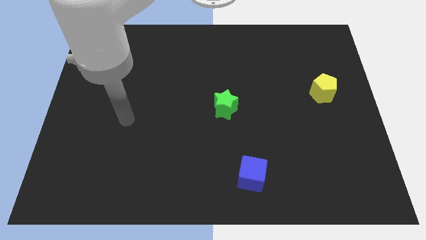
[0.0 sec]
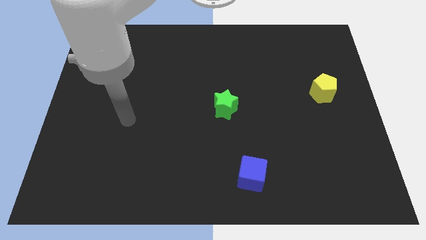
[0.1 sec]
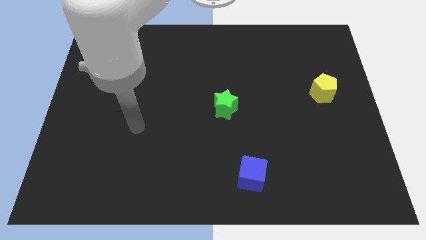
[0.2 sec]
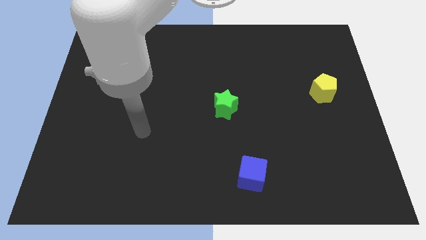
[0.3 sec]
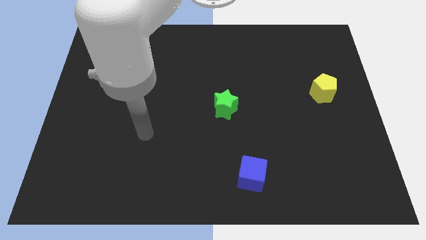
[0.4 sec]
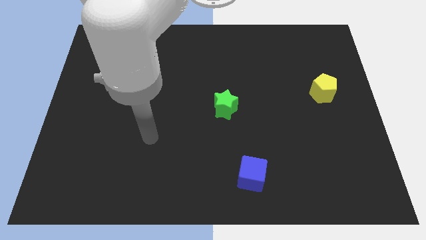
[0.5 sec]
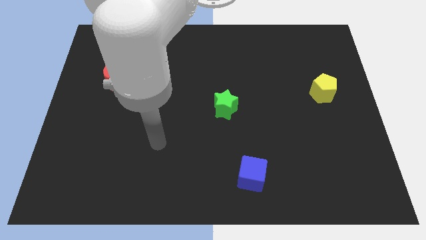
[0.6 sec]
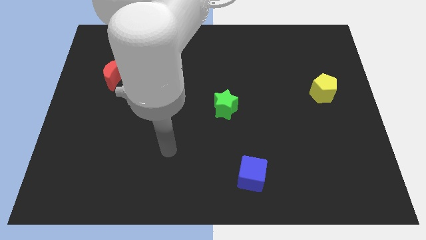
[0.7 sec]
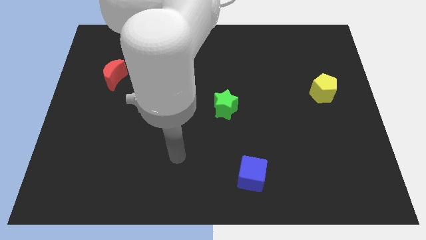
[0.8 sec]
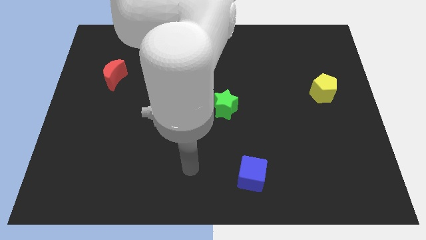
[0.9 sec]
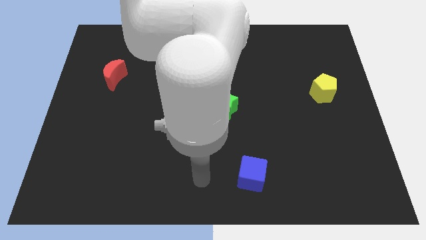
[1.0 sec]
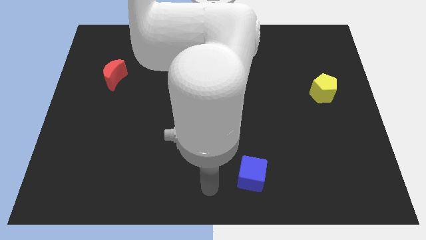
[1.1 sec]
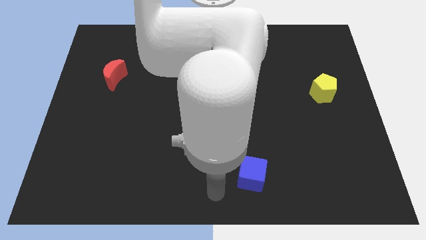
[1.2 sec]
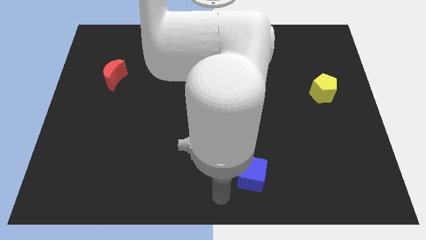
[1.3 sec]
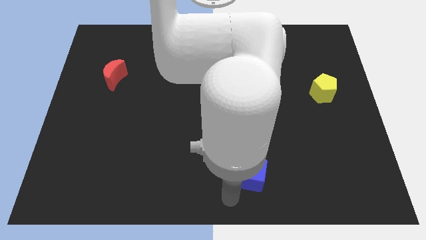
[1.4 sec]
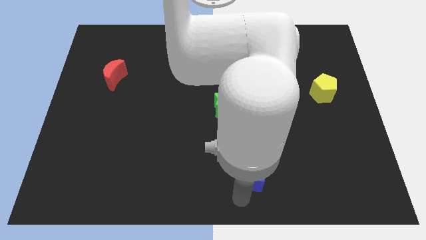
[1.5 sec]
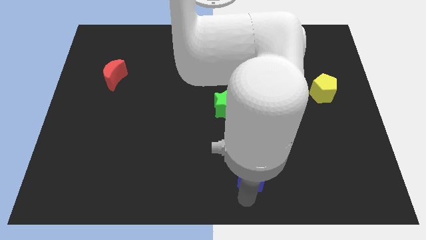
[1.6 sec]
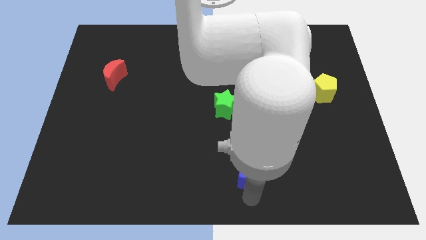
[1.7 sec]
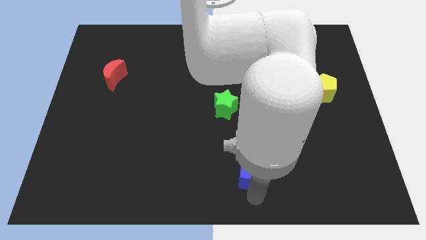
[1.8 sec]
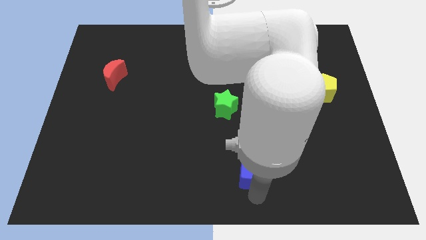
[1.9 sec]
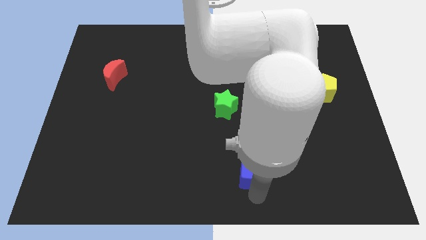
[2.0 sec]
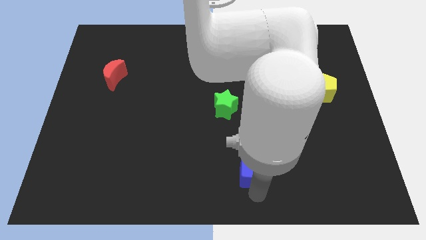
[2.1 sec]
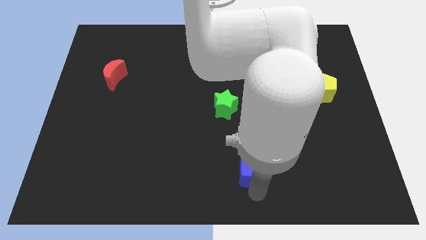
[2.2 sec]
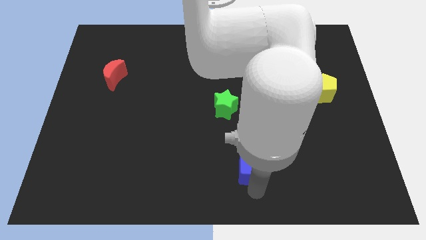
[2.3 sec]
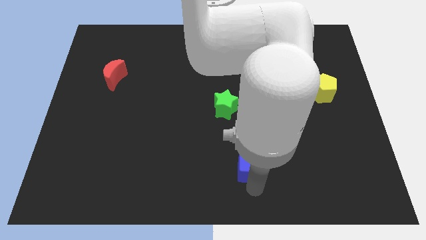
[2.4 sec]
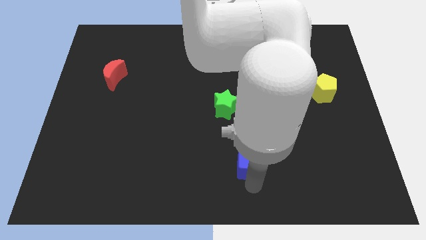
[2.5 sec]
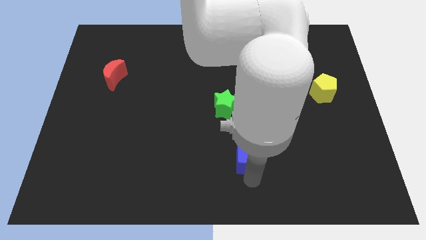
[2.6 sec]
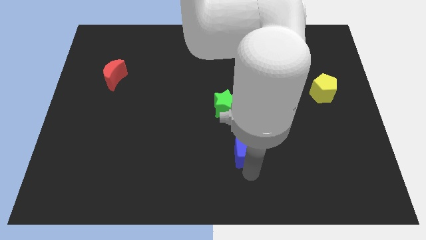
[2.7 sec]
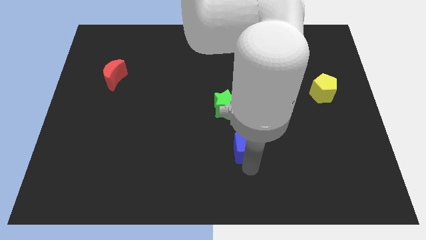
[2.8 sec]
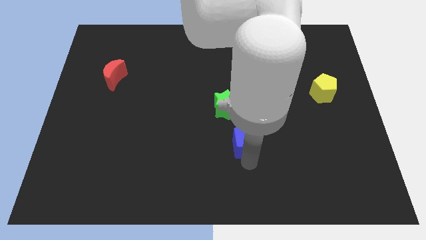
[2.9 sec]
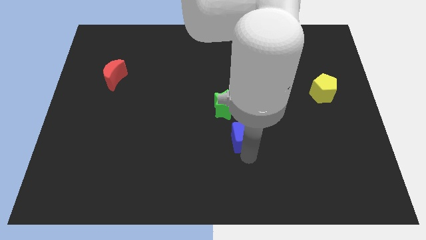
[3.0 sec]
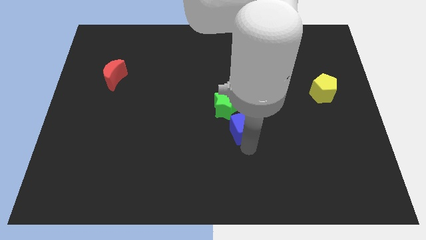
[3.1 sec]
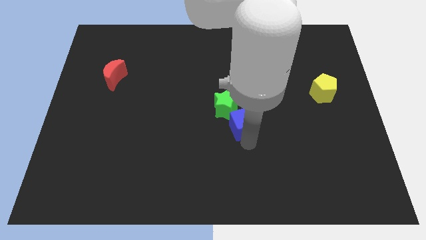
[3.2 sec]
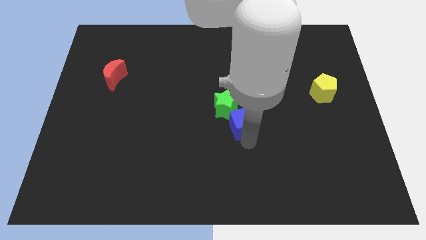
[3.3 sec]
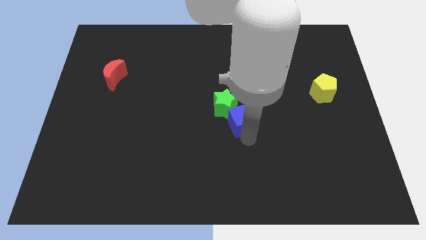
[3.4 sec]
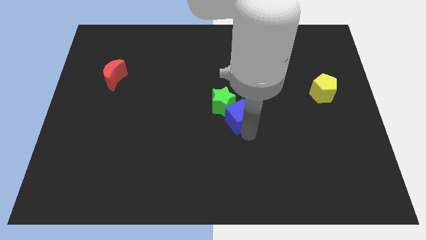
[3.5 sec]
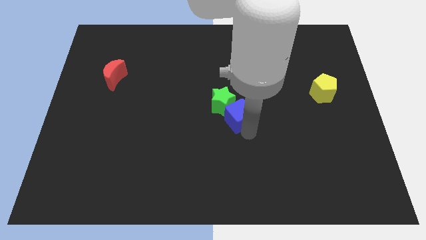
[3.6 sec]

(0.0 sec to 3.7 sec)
slide the cube to the star

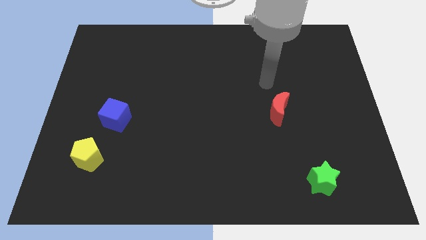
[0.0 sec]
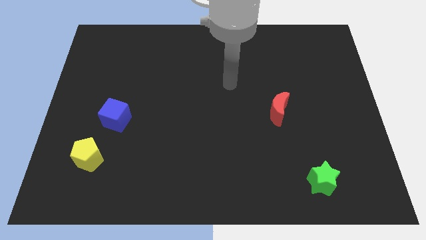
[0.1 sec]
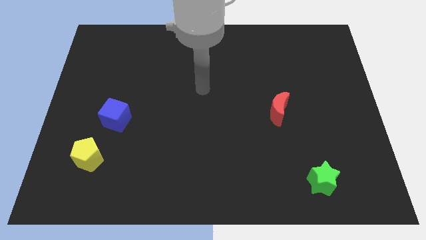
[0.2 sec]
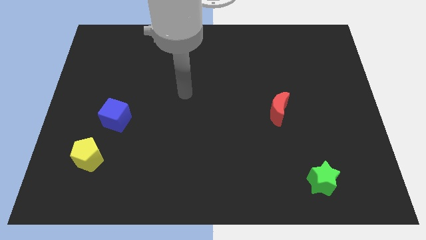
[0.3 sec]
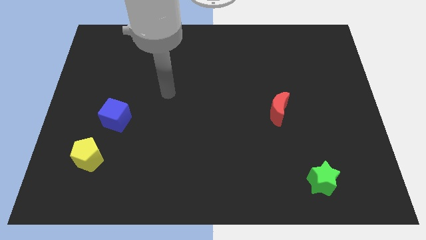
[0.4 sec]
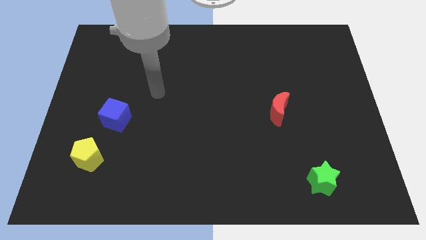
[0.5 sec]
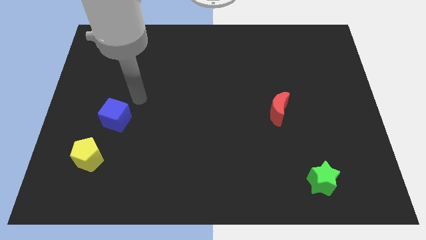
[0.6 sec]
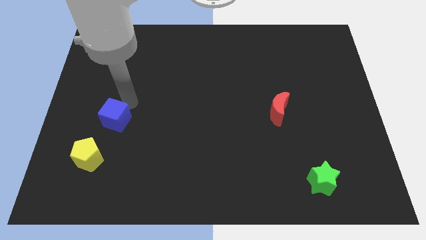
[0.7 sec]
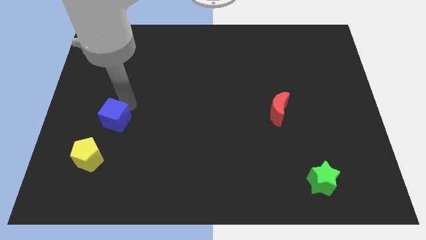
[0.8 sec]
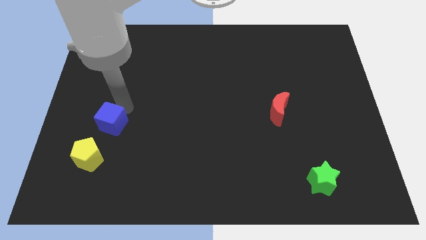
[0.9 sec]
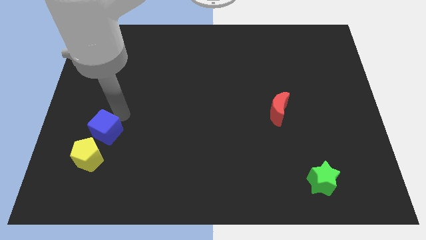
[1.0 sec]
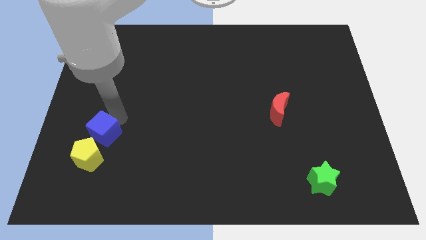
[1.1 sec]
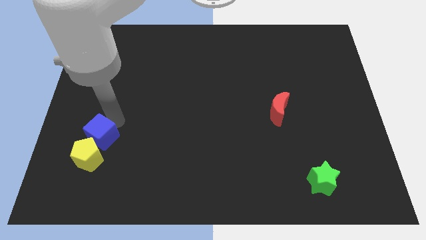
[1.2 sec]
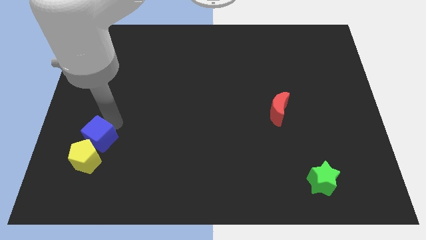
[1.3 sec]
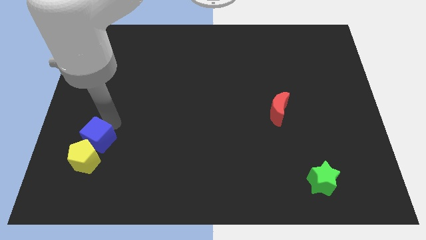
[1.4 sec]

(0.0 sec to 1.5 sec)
move the blue cube close to the yellow pentagon

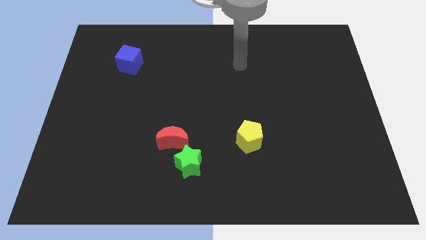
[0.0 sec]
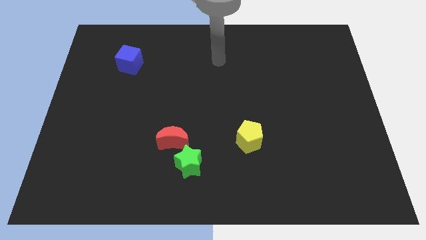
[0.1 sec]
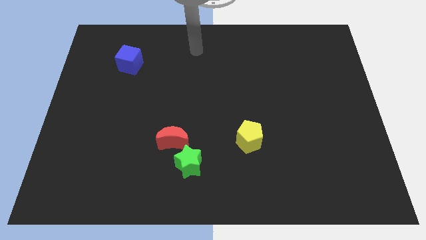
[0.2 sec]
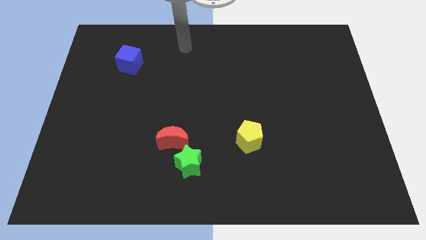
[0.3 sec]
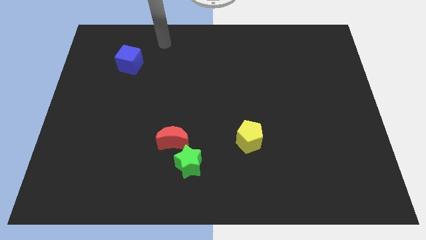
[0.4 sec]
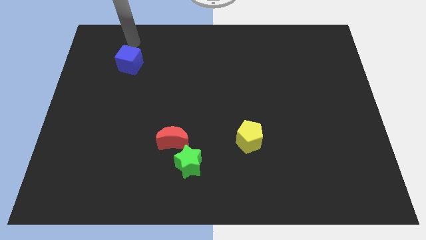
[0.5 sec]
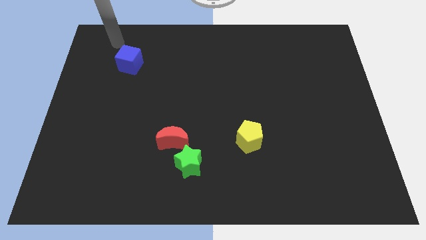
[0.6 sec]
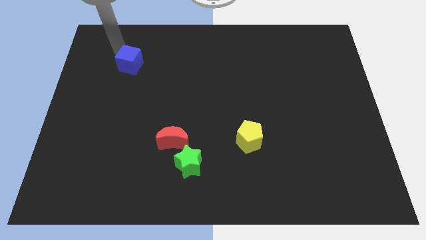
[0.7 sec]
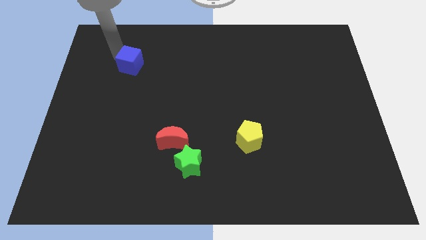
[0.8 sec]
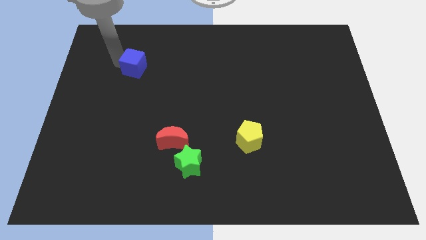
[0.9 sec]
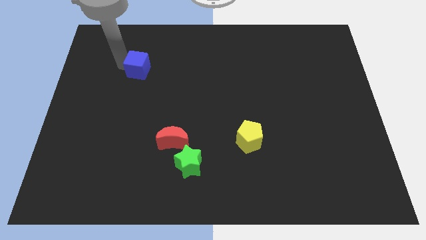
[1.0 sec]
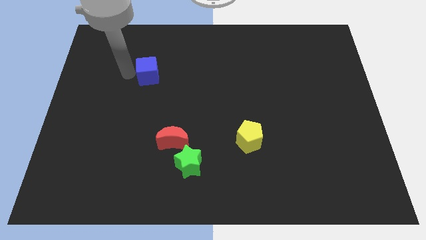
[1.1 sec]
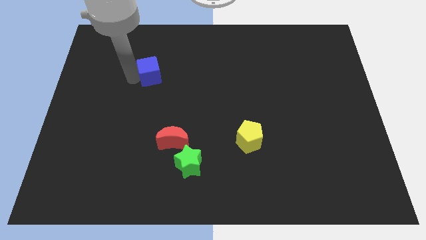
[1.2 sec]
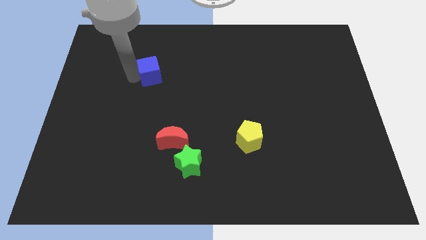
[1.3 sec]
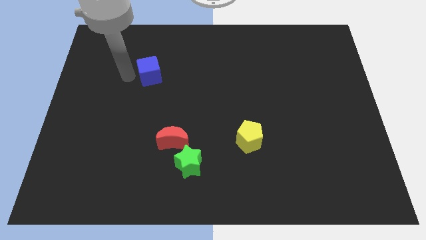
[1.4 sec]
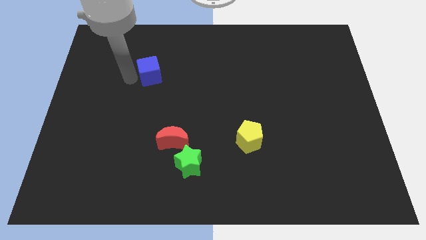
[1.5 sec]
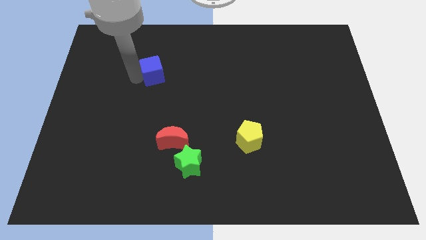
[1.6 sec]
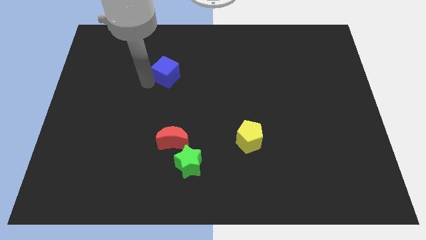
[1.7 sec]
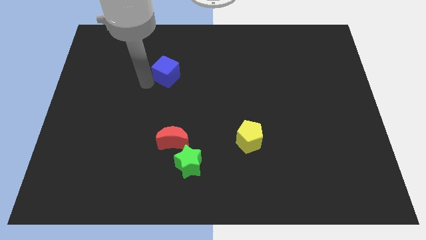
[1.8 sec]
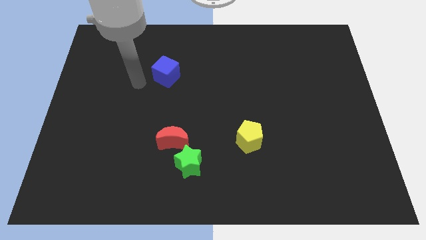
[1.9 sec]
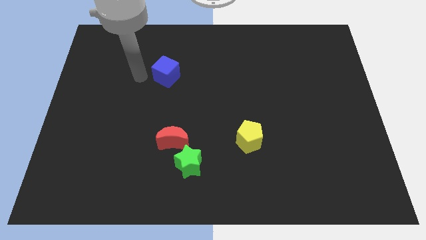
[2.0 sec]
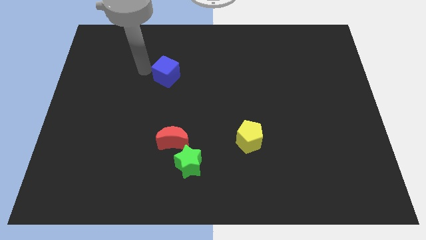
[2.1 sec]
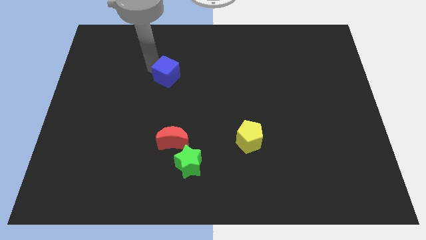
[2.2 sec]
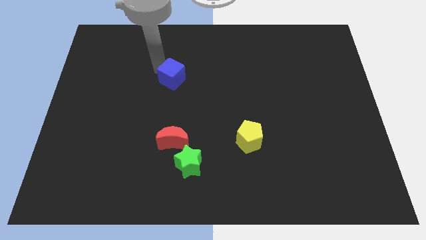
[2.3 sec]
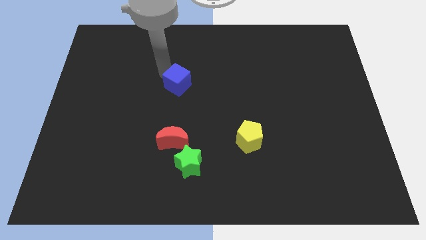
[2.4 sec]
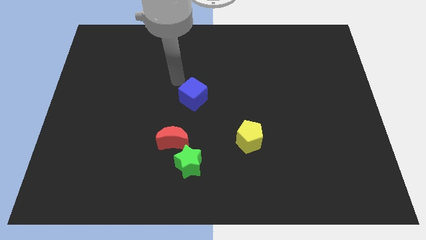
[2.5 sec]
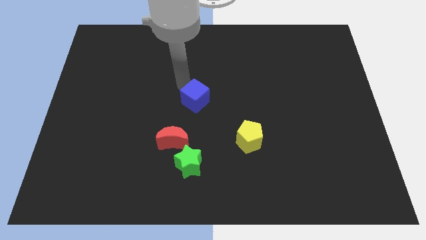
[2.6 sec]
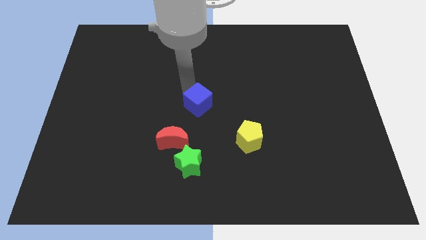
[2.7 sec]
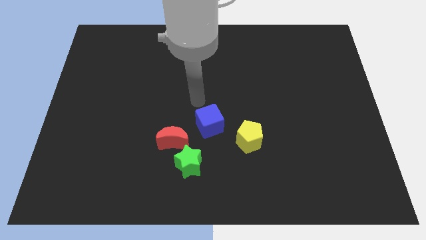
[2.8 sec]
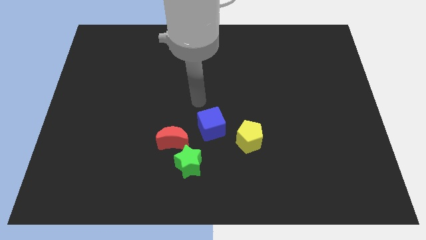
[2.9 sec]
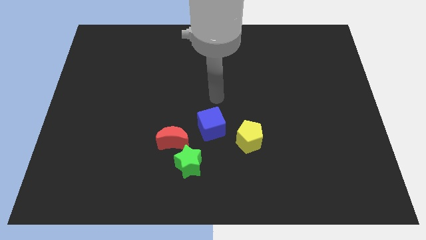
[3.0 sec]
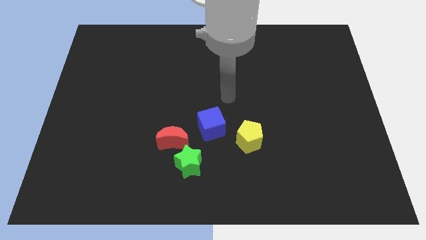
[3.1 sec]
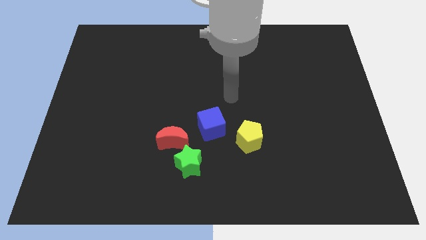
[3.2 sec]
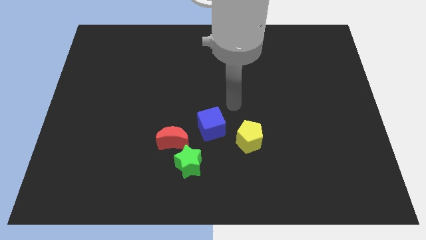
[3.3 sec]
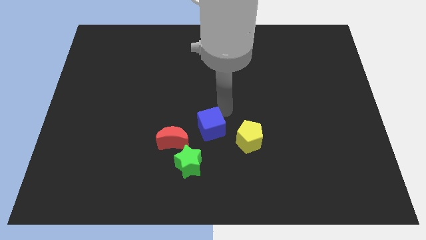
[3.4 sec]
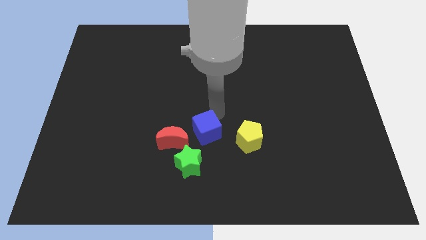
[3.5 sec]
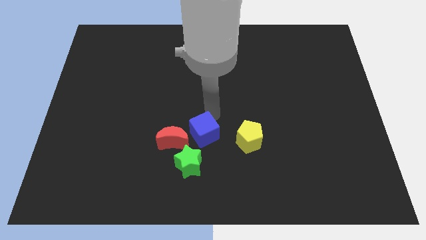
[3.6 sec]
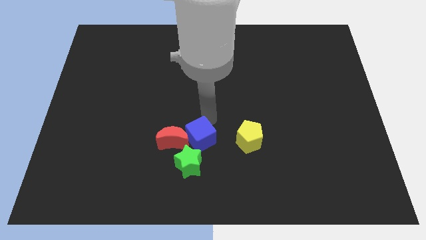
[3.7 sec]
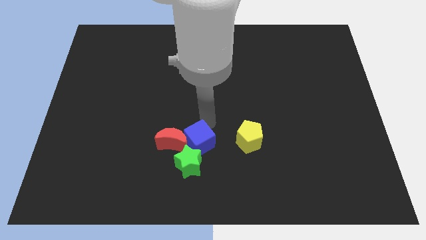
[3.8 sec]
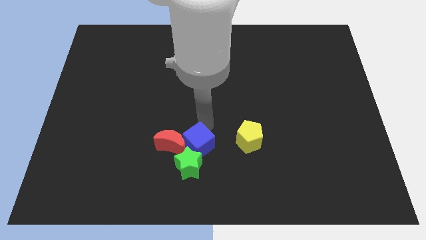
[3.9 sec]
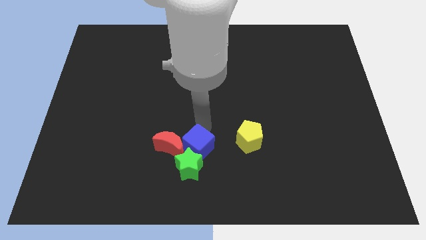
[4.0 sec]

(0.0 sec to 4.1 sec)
slide the blue block towards the green star
